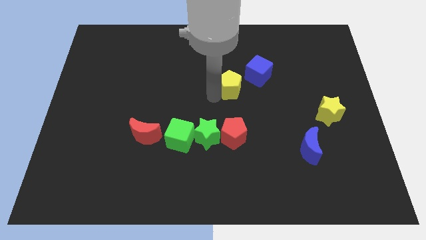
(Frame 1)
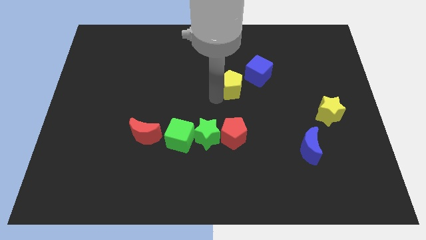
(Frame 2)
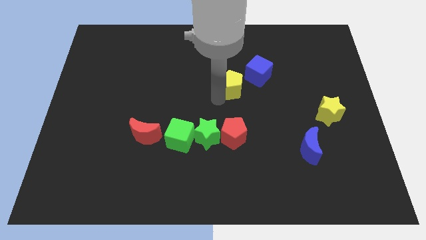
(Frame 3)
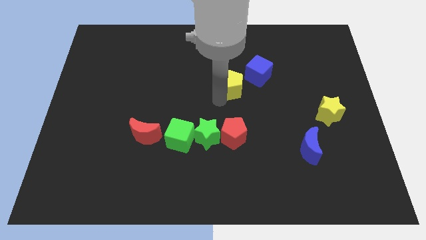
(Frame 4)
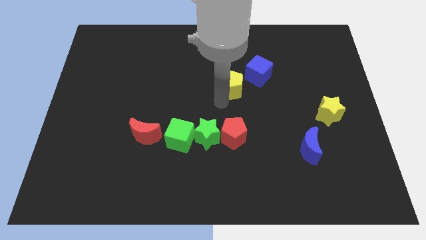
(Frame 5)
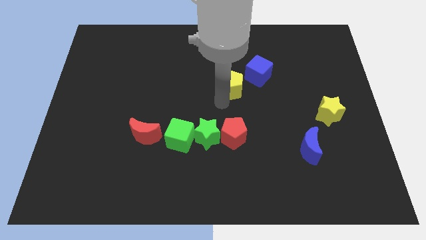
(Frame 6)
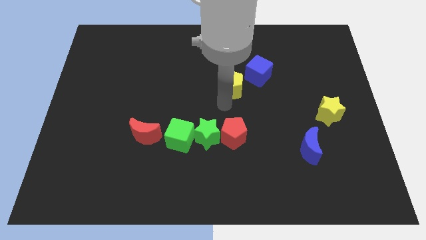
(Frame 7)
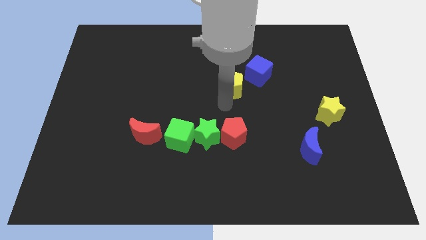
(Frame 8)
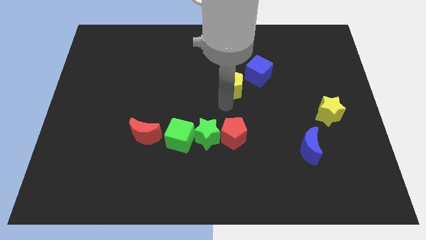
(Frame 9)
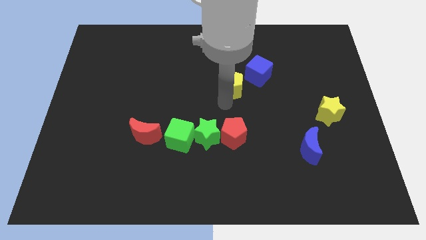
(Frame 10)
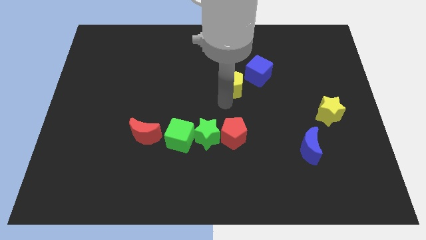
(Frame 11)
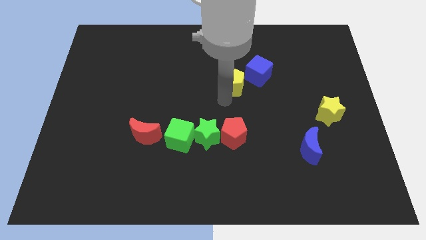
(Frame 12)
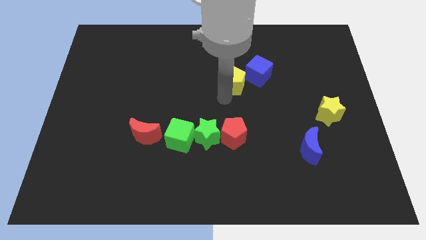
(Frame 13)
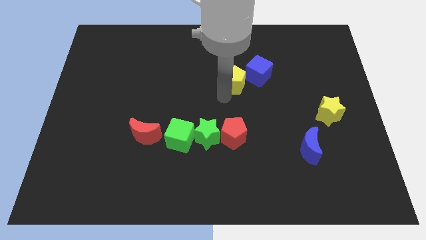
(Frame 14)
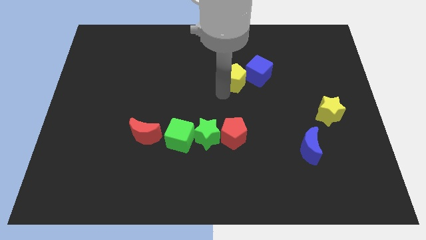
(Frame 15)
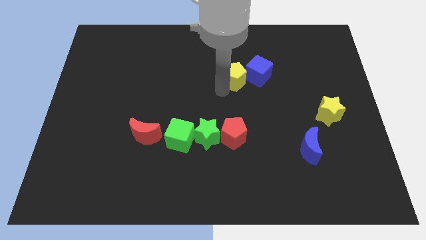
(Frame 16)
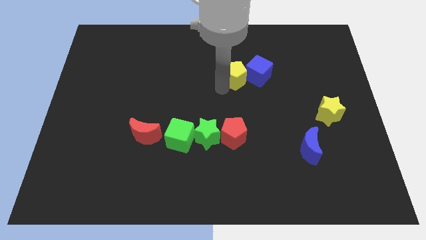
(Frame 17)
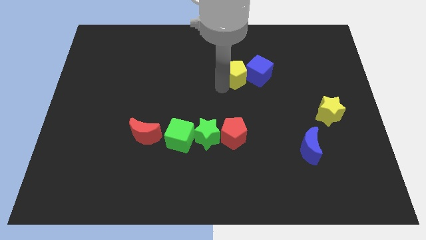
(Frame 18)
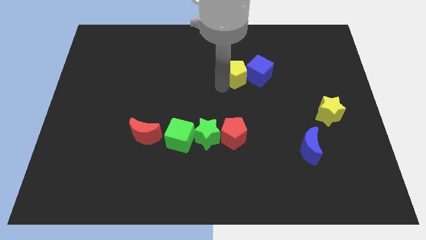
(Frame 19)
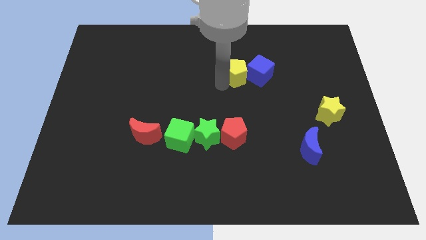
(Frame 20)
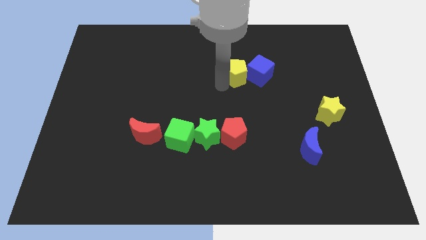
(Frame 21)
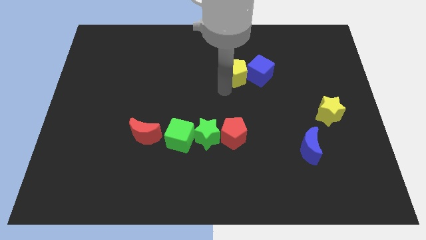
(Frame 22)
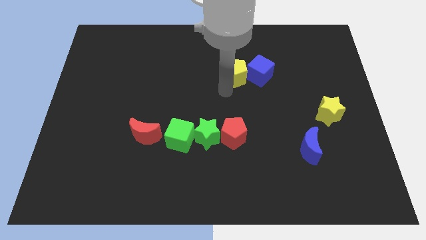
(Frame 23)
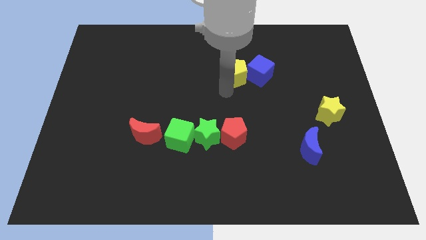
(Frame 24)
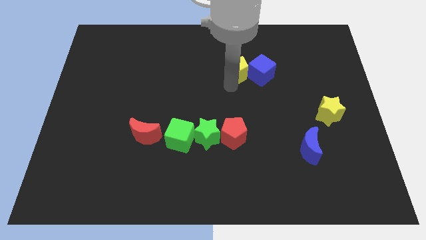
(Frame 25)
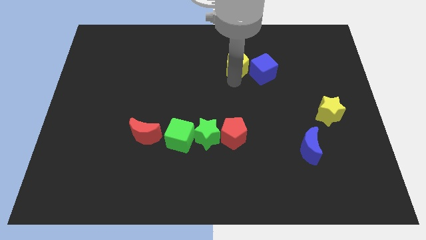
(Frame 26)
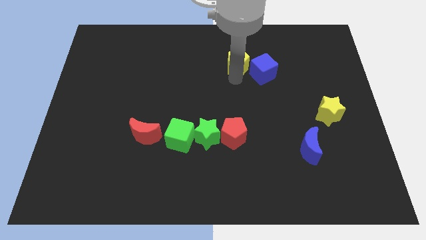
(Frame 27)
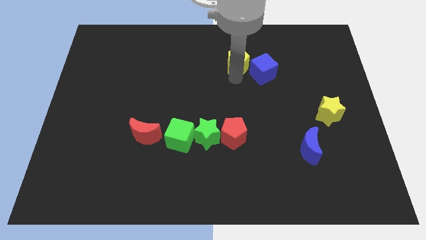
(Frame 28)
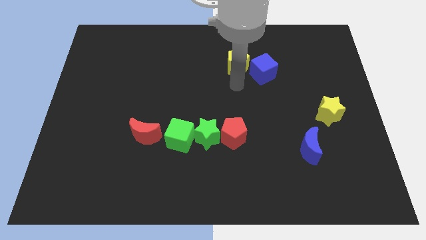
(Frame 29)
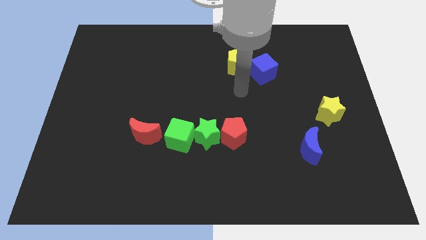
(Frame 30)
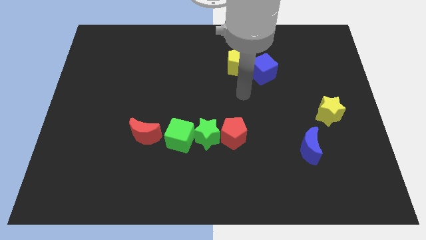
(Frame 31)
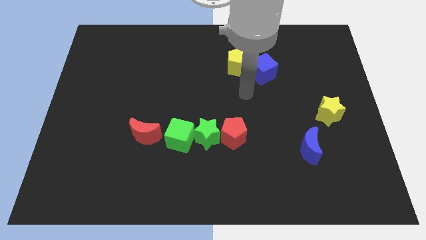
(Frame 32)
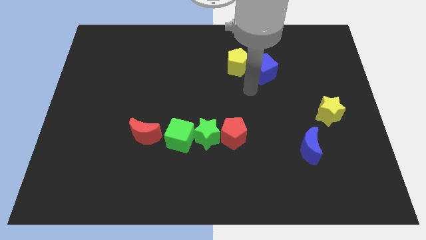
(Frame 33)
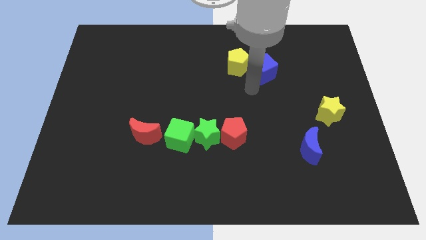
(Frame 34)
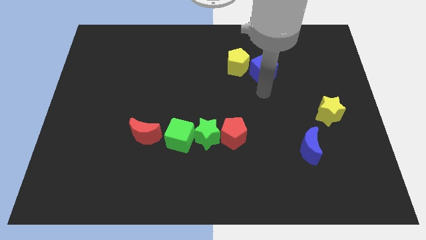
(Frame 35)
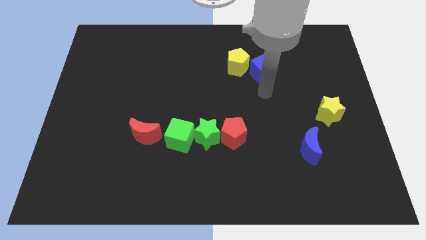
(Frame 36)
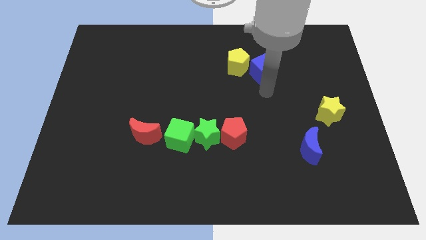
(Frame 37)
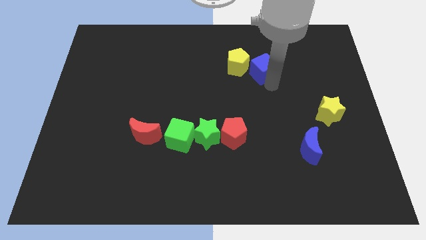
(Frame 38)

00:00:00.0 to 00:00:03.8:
move the yellow pentagon to the left of the blue cube

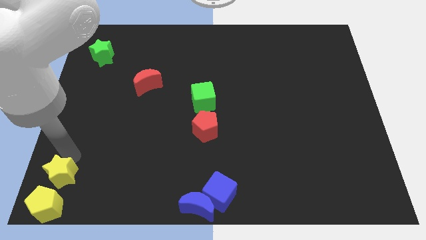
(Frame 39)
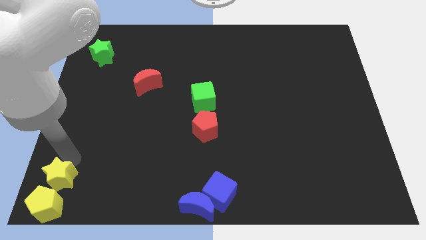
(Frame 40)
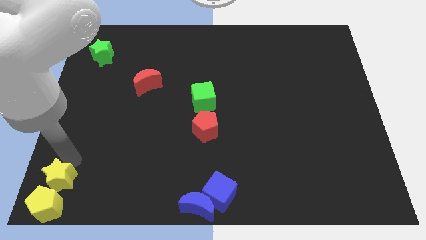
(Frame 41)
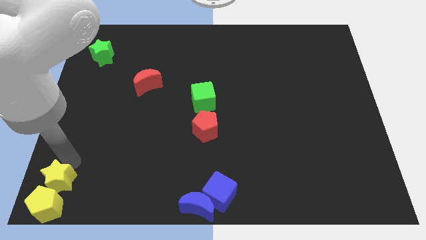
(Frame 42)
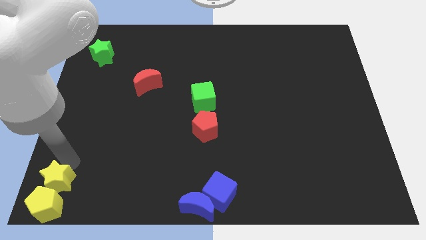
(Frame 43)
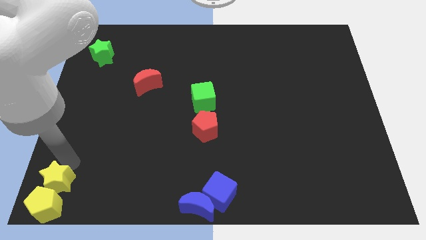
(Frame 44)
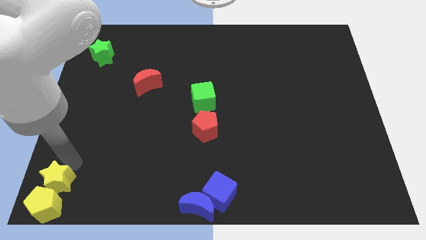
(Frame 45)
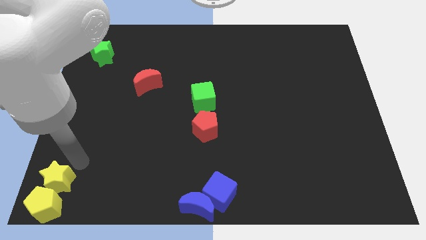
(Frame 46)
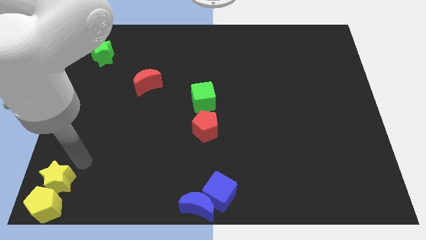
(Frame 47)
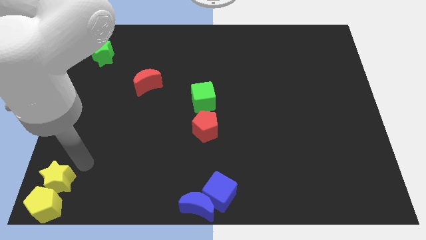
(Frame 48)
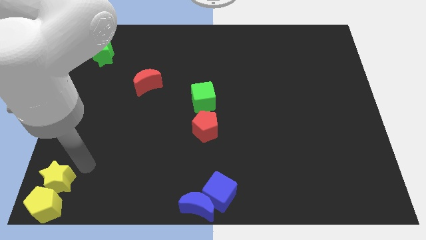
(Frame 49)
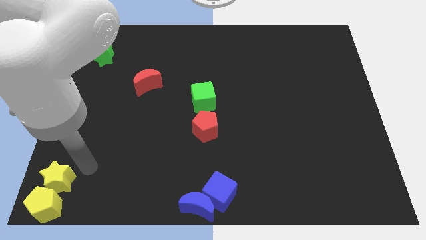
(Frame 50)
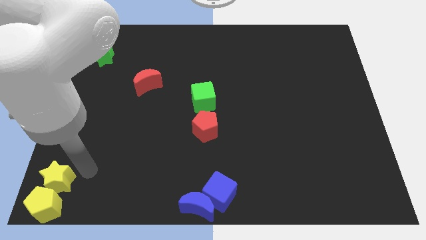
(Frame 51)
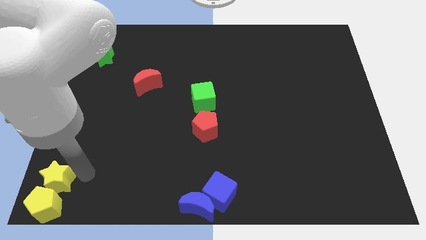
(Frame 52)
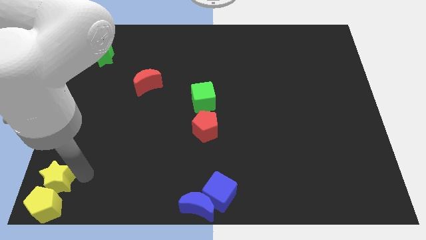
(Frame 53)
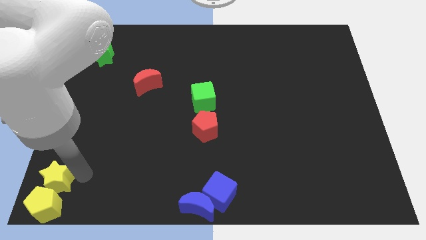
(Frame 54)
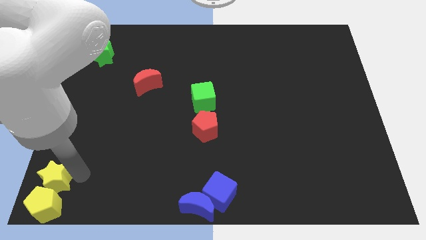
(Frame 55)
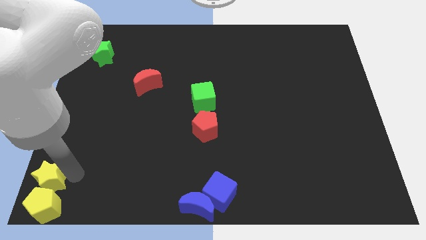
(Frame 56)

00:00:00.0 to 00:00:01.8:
move the yellow star to the top of yellow pentagon

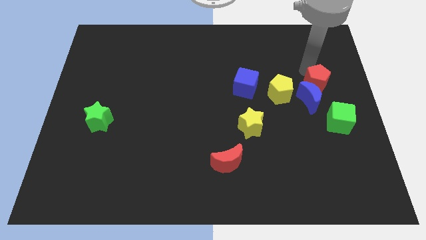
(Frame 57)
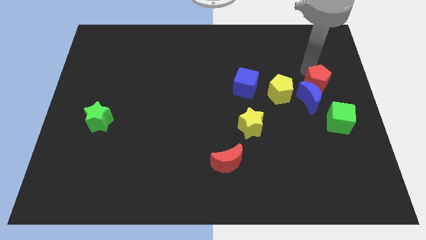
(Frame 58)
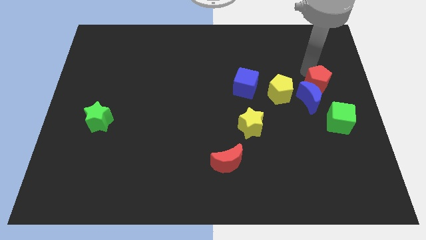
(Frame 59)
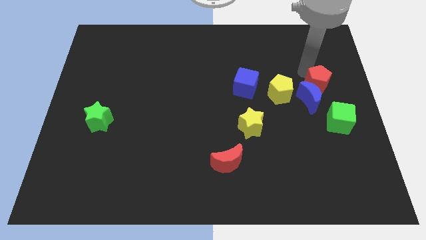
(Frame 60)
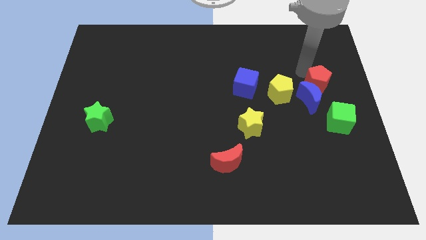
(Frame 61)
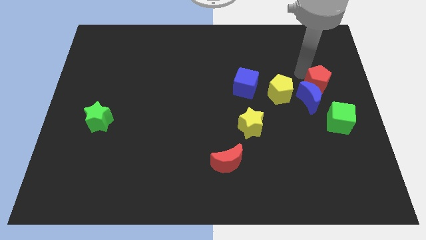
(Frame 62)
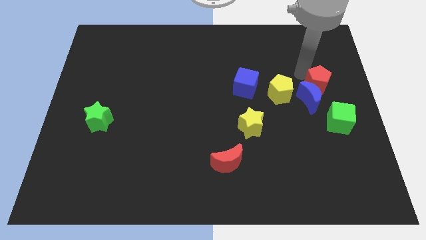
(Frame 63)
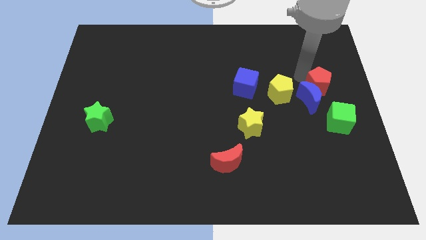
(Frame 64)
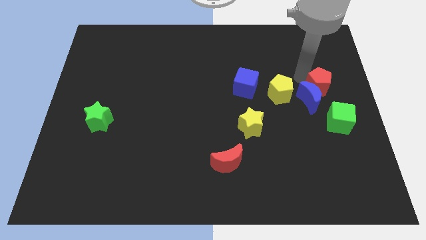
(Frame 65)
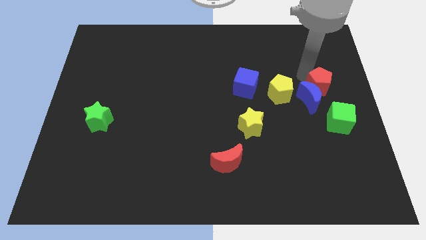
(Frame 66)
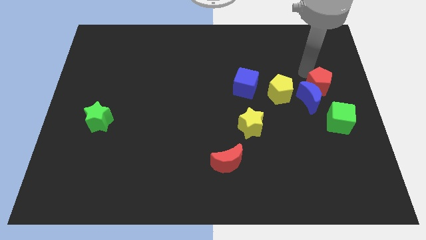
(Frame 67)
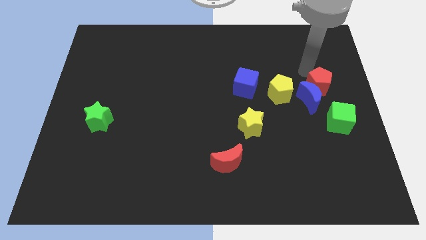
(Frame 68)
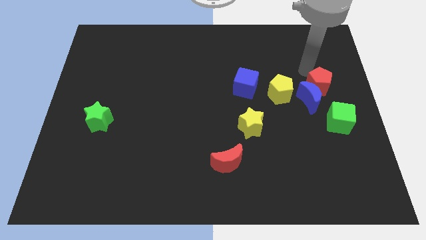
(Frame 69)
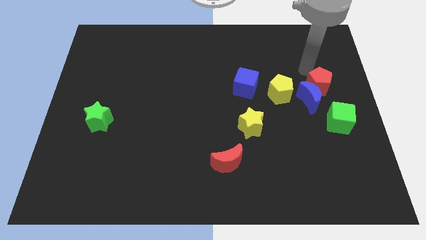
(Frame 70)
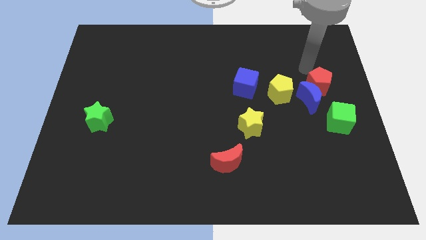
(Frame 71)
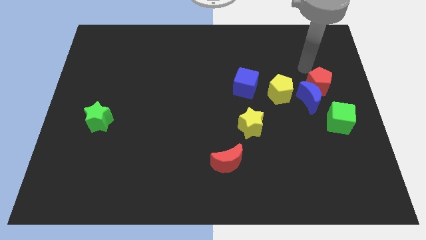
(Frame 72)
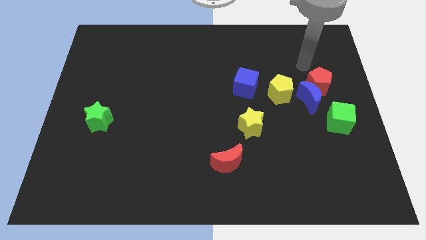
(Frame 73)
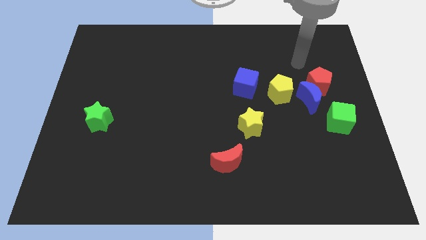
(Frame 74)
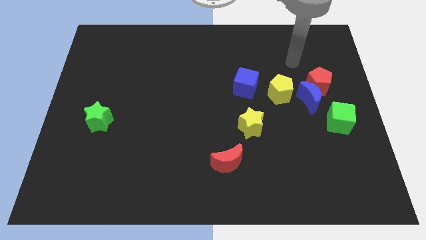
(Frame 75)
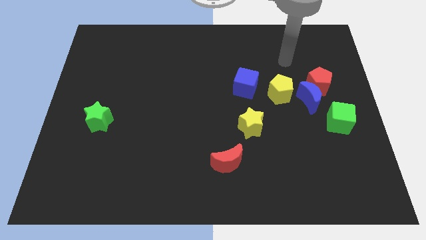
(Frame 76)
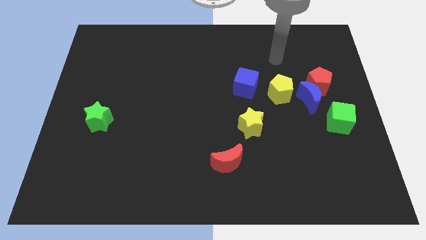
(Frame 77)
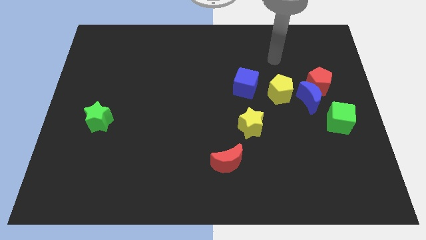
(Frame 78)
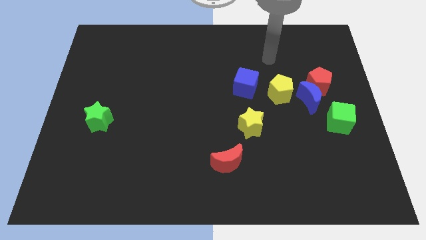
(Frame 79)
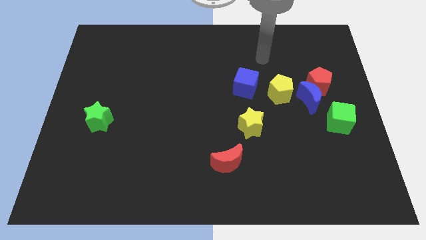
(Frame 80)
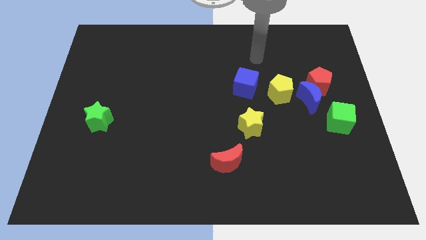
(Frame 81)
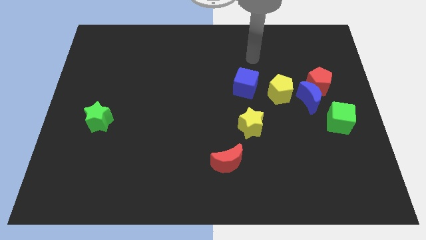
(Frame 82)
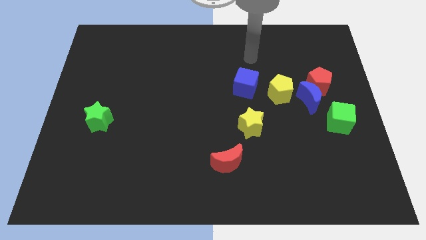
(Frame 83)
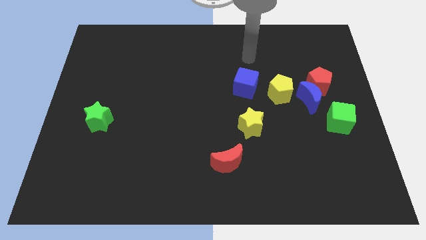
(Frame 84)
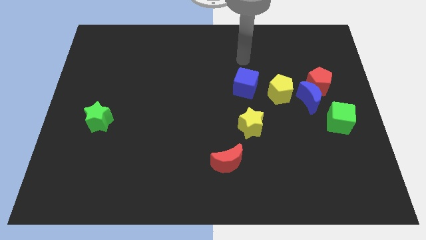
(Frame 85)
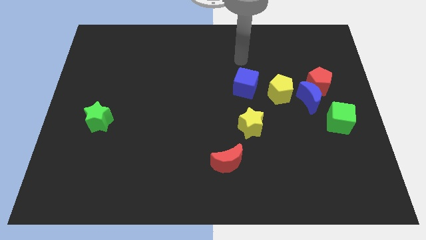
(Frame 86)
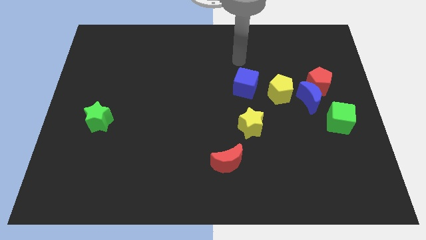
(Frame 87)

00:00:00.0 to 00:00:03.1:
point your hand above the blue cube

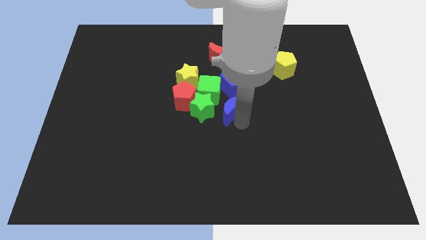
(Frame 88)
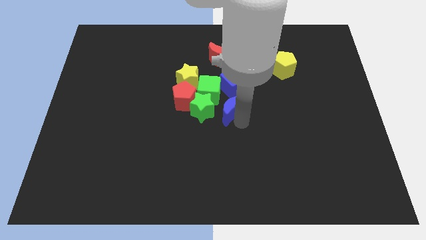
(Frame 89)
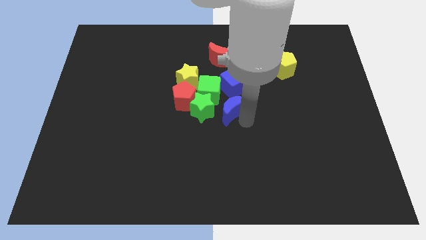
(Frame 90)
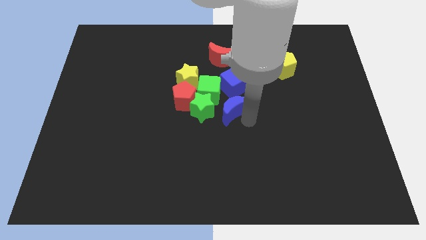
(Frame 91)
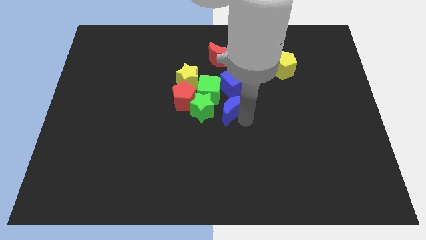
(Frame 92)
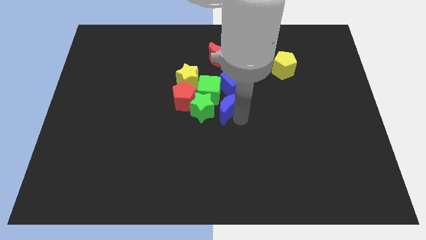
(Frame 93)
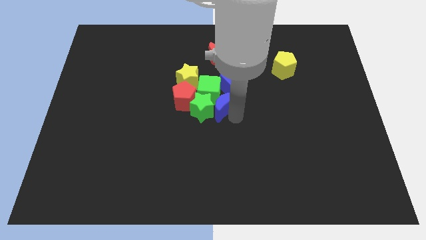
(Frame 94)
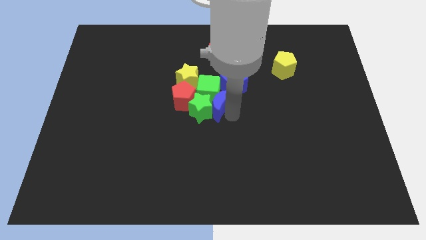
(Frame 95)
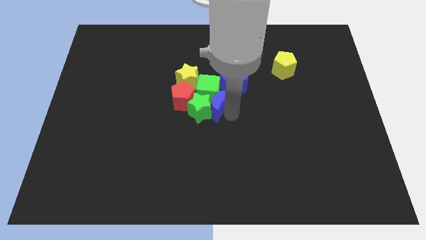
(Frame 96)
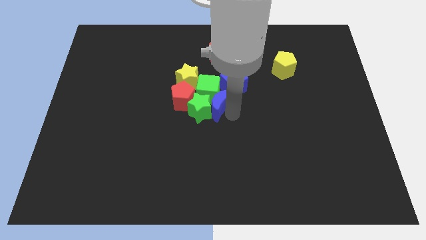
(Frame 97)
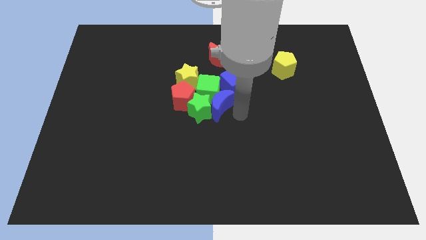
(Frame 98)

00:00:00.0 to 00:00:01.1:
push the blue moon closer to the green star
